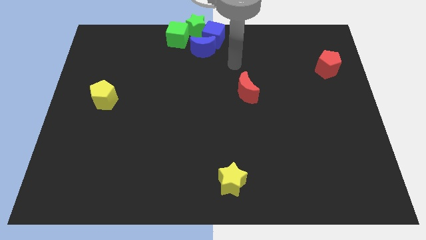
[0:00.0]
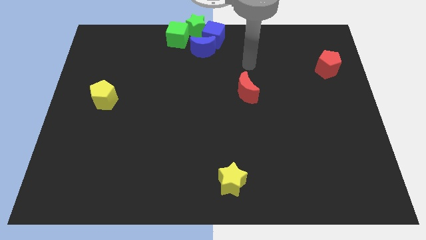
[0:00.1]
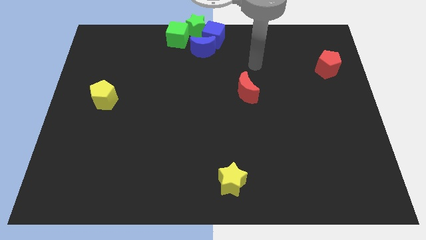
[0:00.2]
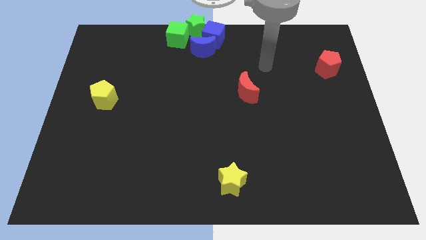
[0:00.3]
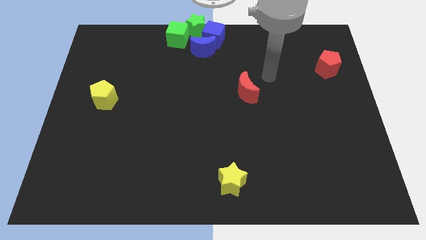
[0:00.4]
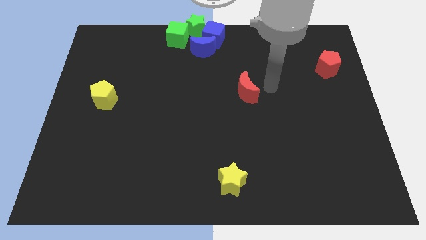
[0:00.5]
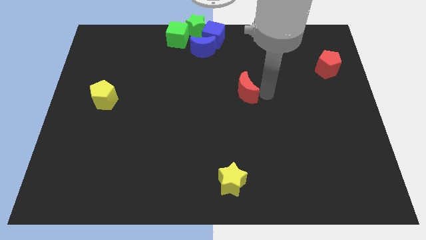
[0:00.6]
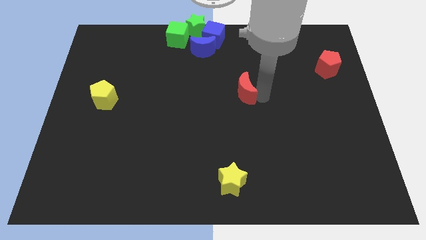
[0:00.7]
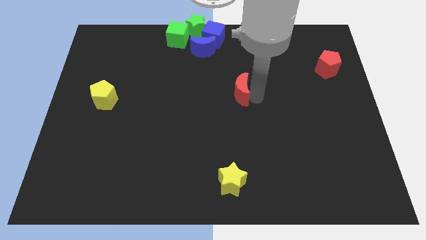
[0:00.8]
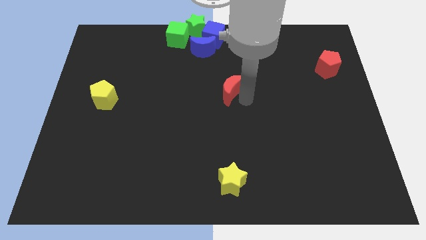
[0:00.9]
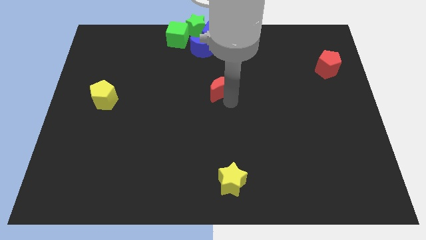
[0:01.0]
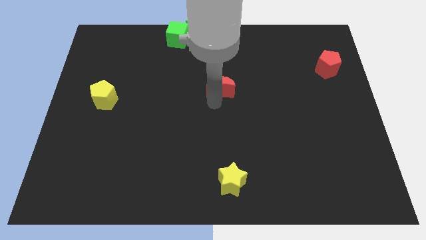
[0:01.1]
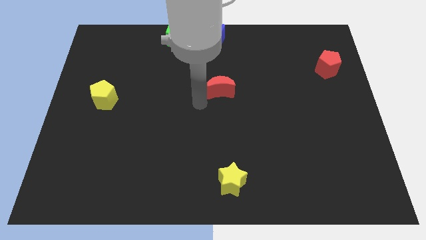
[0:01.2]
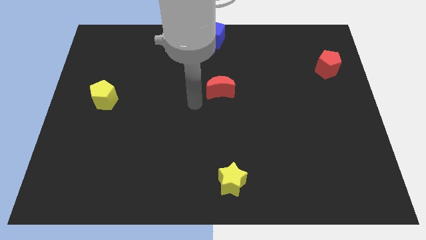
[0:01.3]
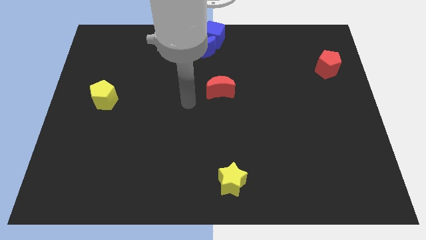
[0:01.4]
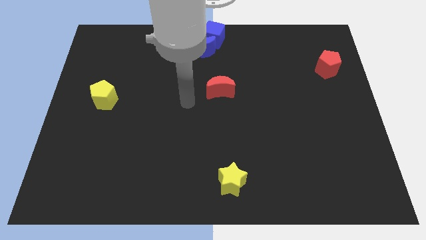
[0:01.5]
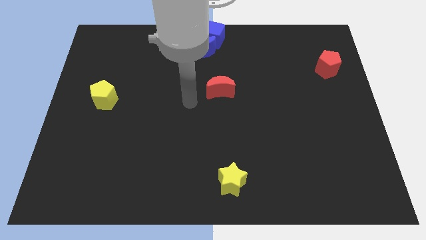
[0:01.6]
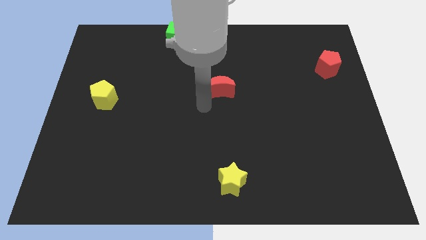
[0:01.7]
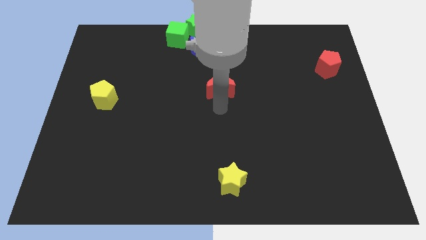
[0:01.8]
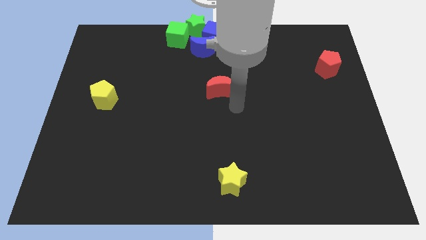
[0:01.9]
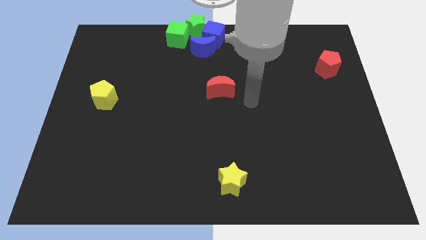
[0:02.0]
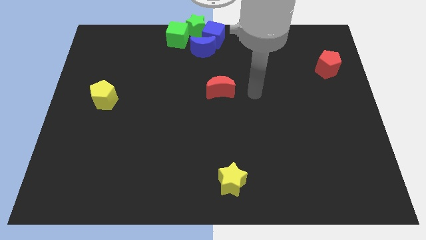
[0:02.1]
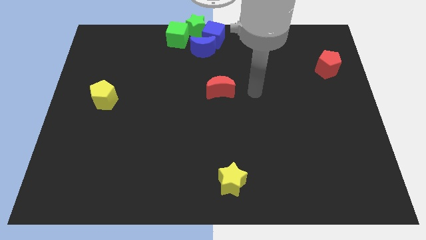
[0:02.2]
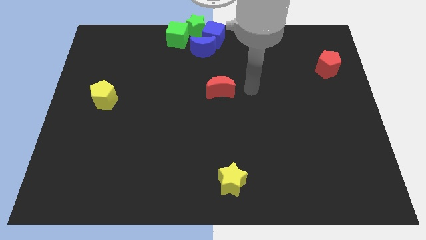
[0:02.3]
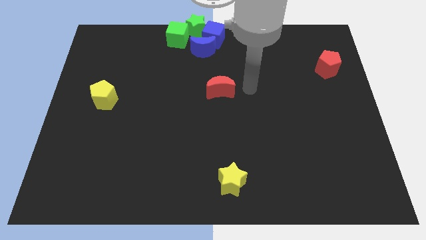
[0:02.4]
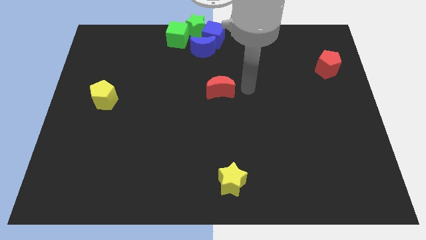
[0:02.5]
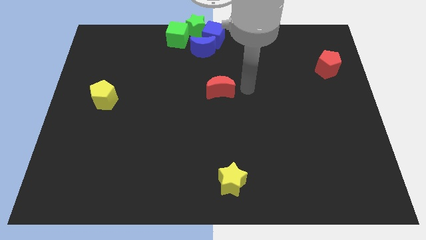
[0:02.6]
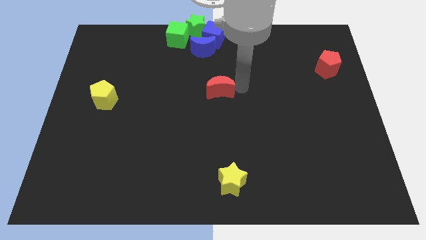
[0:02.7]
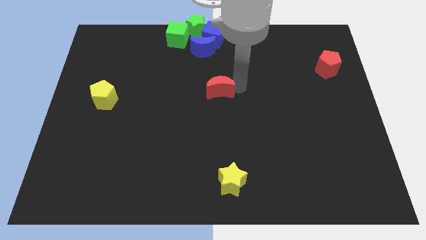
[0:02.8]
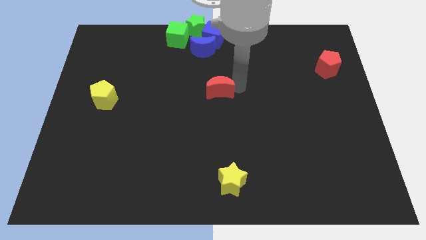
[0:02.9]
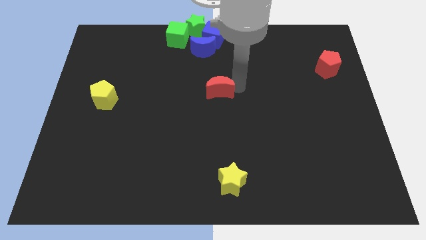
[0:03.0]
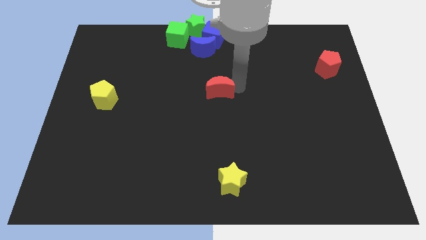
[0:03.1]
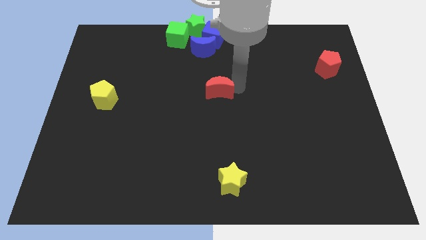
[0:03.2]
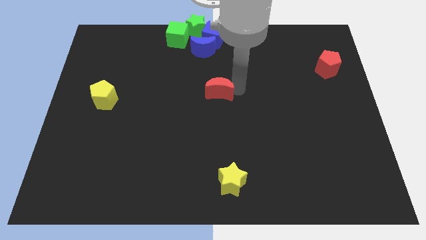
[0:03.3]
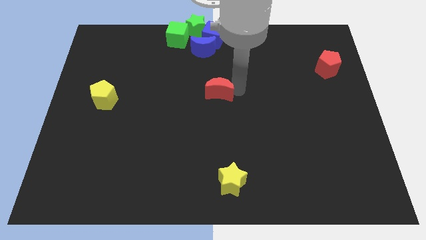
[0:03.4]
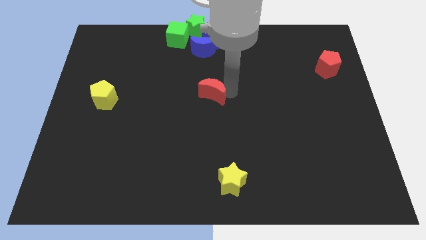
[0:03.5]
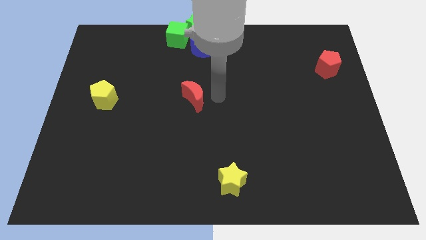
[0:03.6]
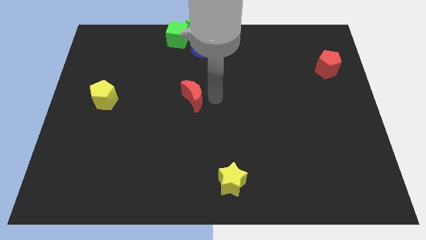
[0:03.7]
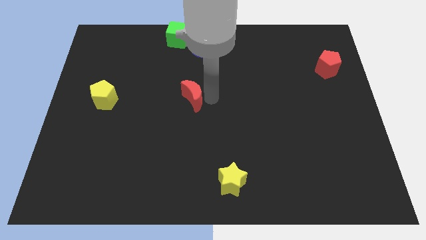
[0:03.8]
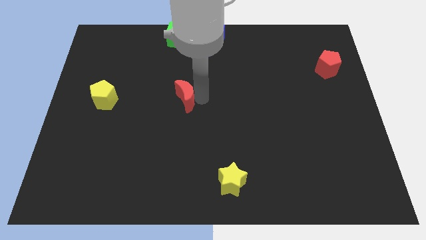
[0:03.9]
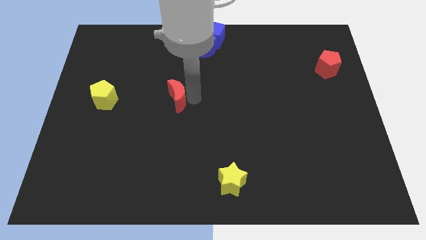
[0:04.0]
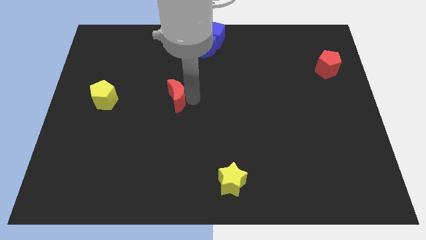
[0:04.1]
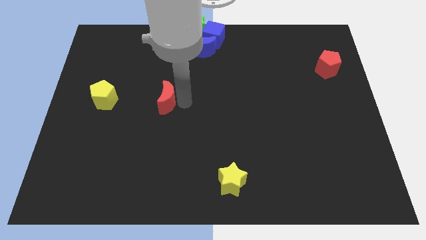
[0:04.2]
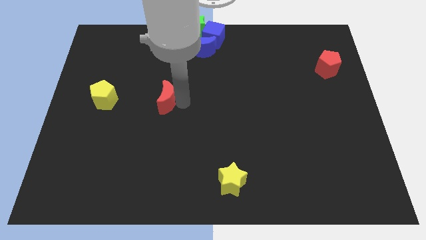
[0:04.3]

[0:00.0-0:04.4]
move the red moon to the right side of the yellow pentagon

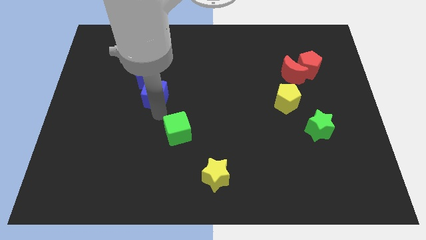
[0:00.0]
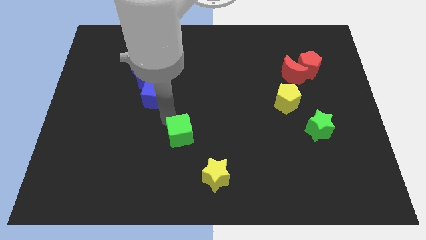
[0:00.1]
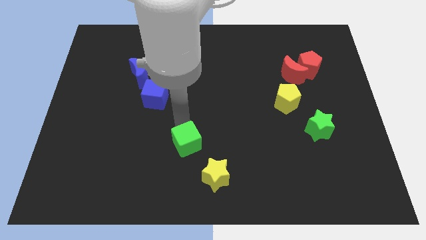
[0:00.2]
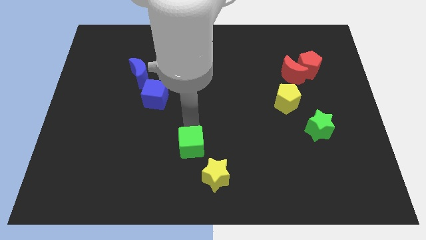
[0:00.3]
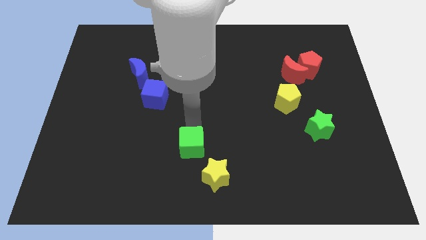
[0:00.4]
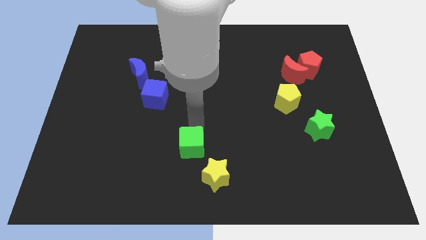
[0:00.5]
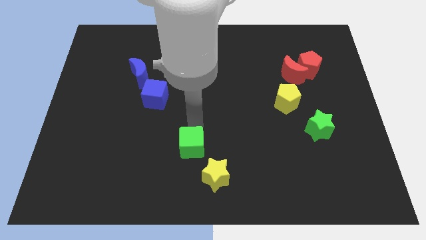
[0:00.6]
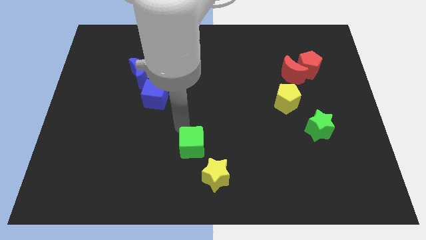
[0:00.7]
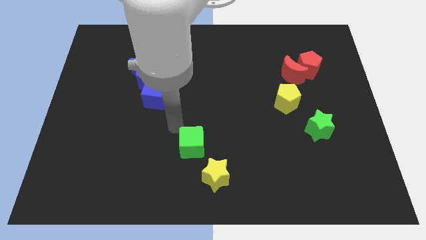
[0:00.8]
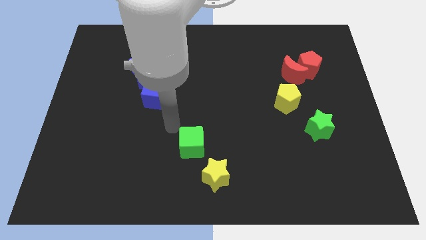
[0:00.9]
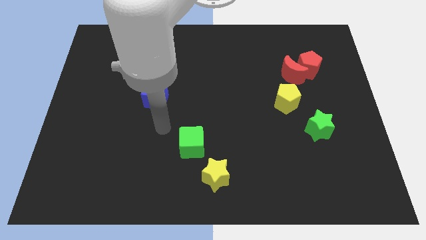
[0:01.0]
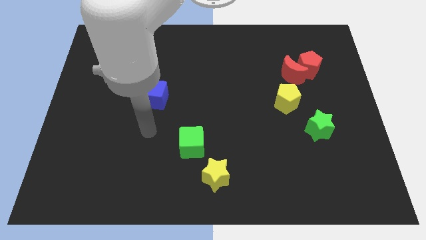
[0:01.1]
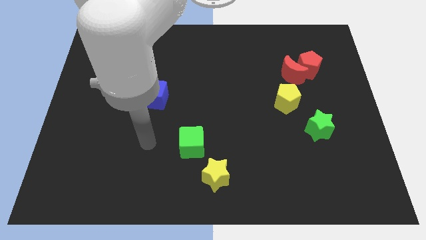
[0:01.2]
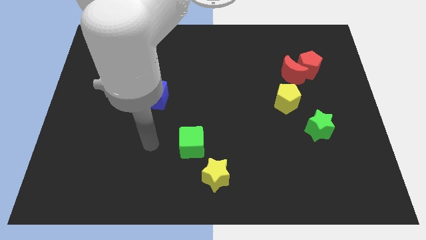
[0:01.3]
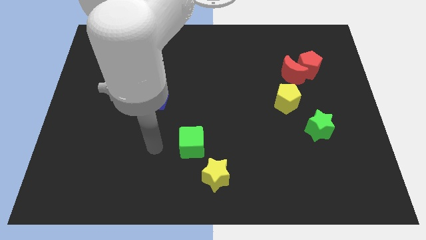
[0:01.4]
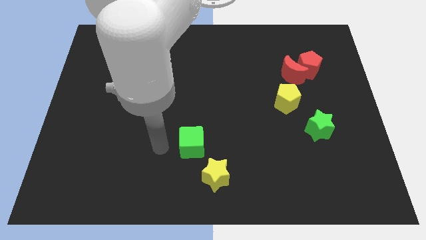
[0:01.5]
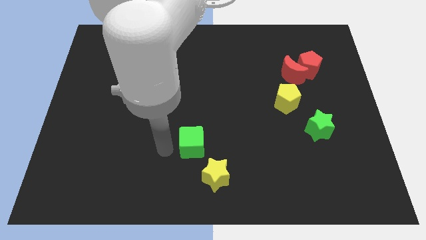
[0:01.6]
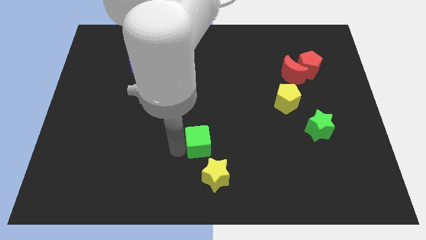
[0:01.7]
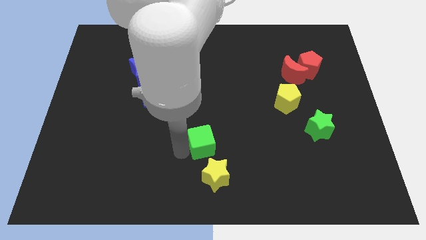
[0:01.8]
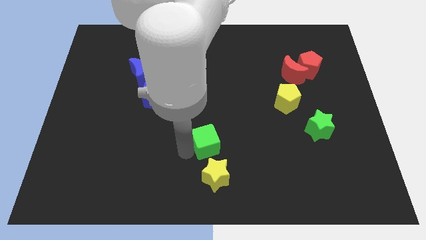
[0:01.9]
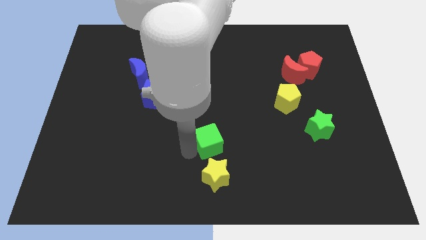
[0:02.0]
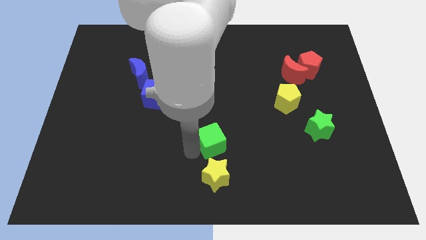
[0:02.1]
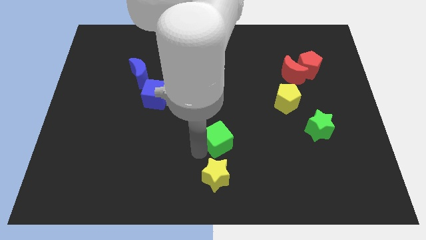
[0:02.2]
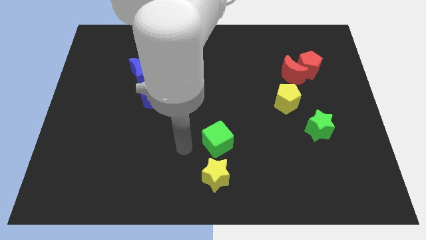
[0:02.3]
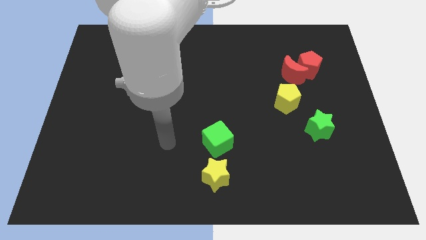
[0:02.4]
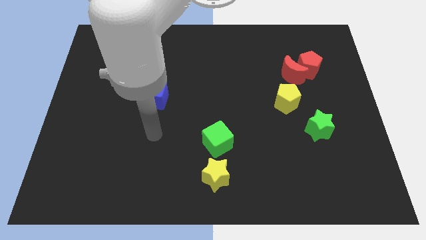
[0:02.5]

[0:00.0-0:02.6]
place green cube on top of the yellow star to the middle bottom of the board

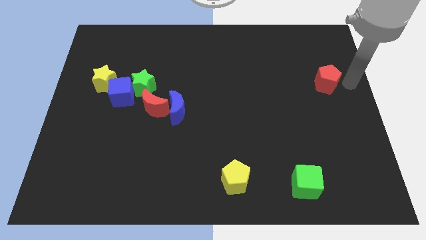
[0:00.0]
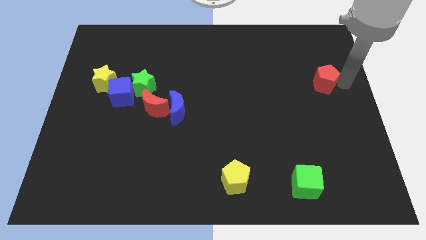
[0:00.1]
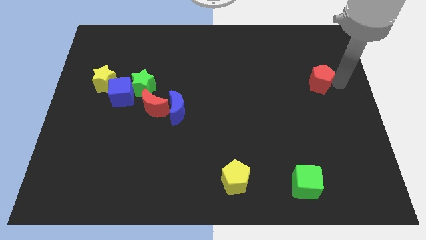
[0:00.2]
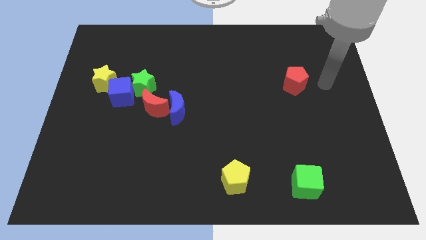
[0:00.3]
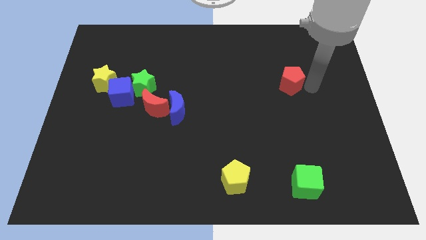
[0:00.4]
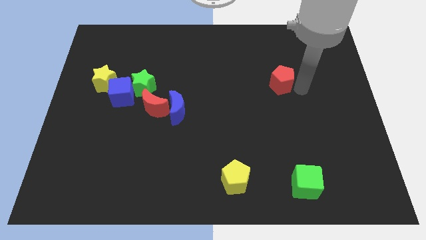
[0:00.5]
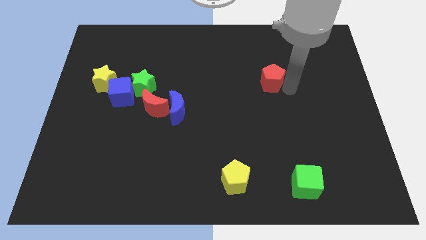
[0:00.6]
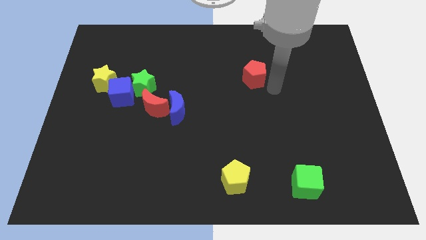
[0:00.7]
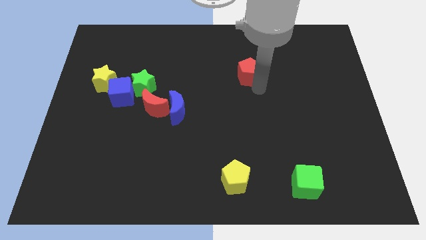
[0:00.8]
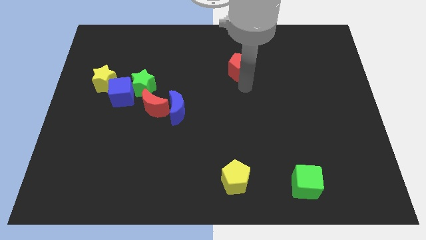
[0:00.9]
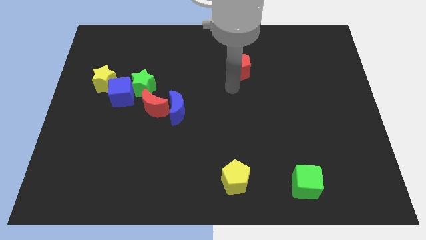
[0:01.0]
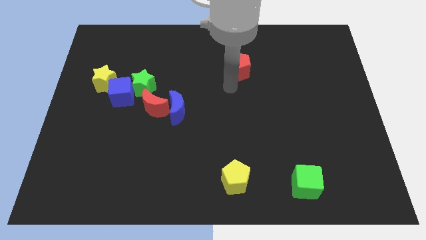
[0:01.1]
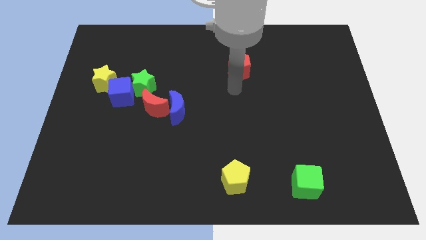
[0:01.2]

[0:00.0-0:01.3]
place the red pentagon above the yellow pentagon

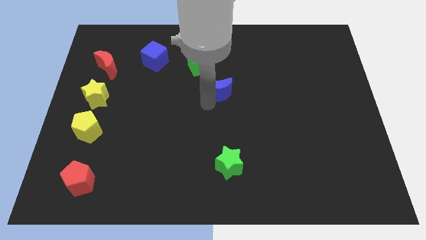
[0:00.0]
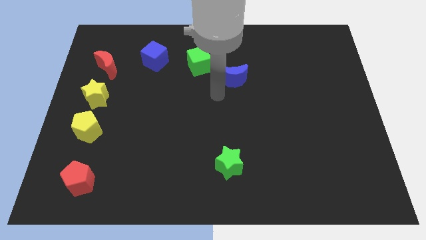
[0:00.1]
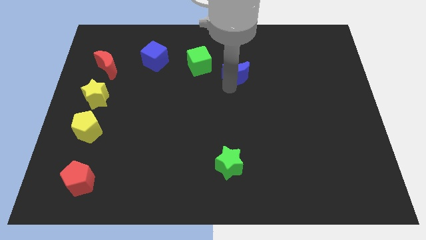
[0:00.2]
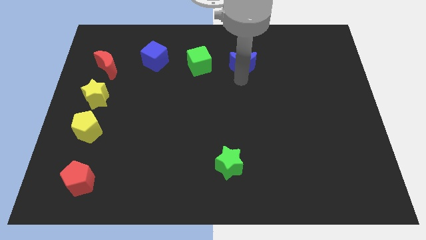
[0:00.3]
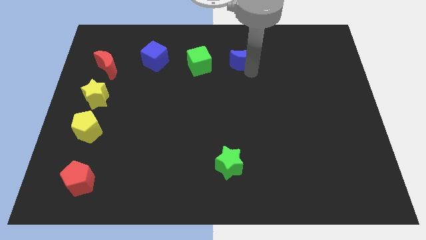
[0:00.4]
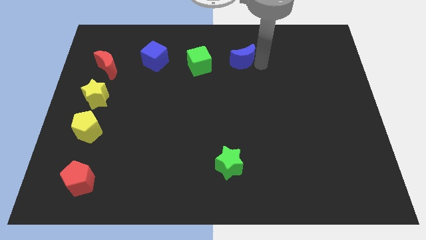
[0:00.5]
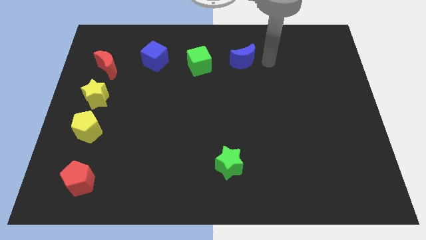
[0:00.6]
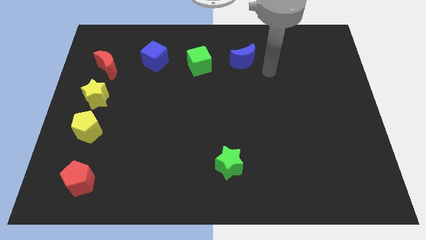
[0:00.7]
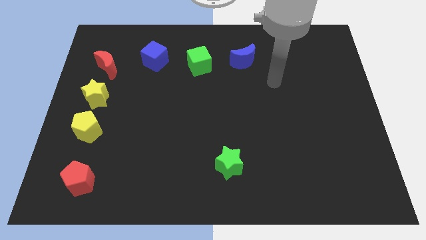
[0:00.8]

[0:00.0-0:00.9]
move the blue moon right to the green cube
